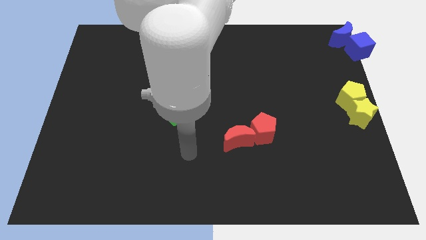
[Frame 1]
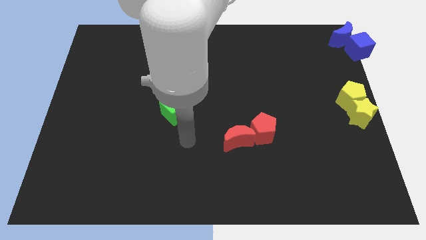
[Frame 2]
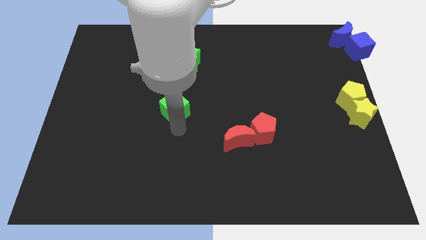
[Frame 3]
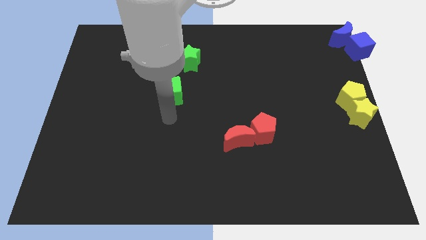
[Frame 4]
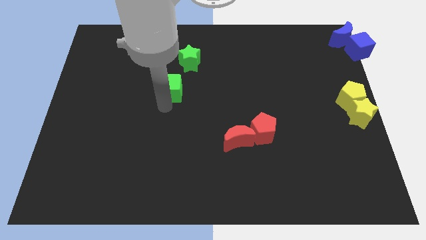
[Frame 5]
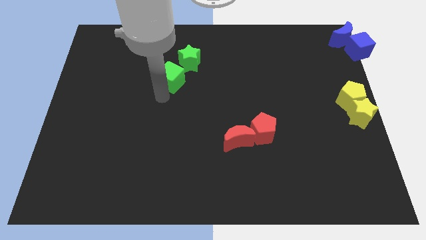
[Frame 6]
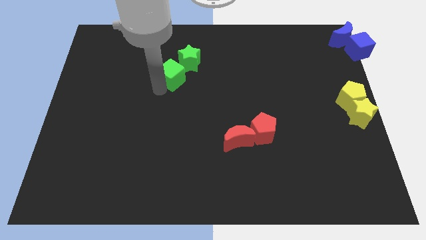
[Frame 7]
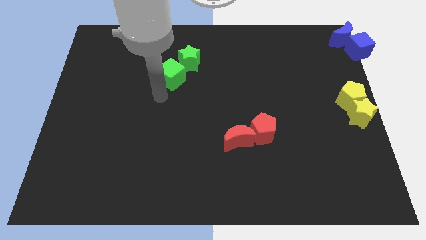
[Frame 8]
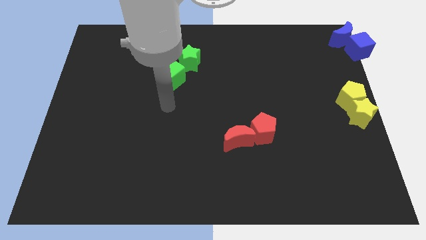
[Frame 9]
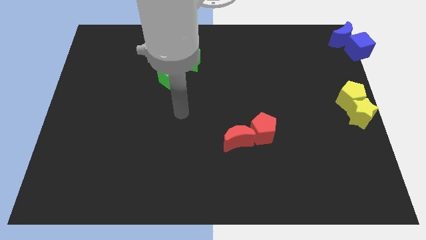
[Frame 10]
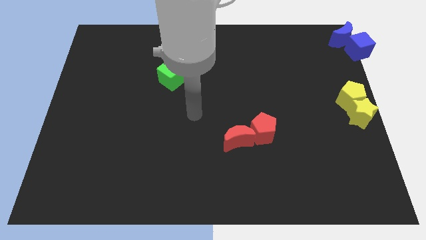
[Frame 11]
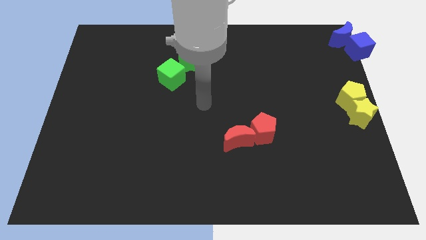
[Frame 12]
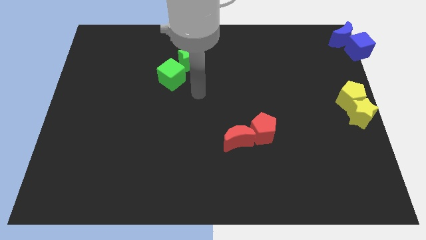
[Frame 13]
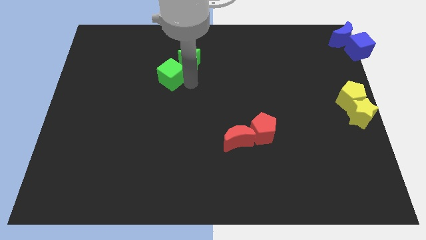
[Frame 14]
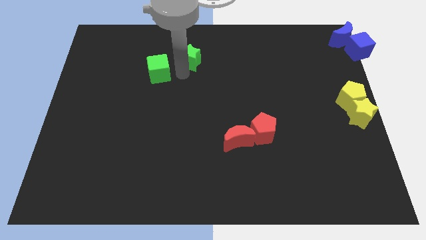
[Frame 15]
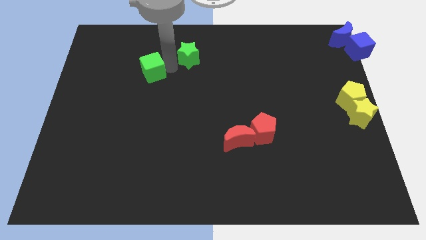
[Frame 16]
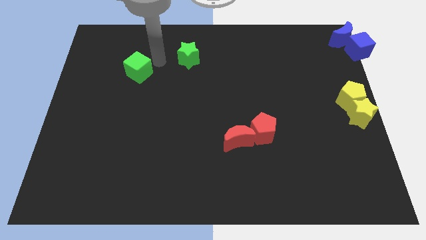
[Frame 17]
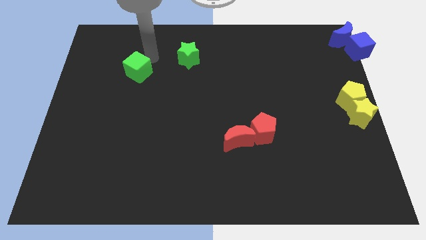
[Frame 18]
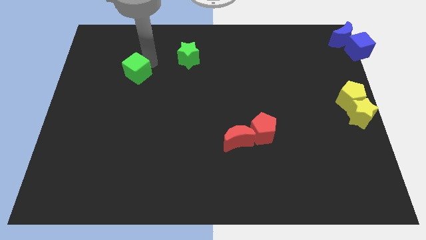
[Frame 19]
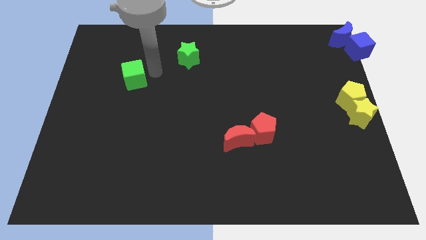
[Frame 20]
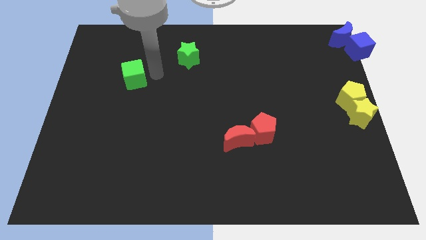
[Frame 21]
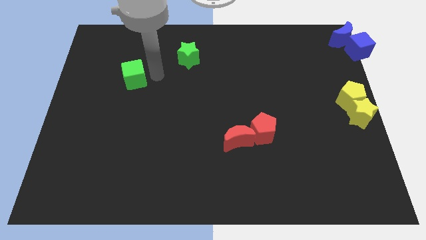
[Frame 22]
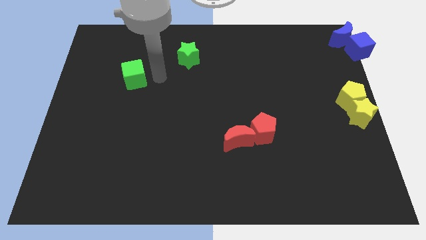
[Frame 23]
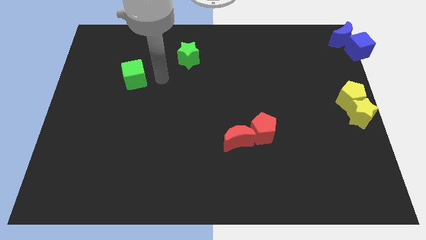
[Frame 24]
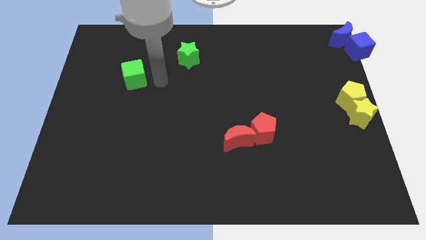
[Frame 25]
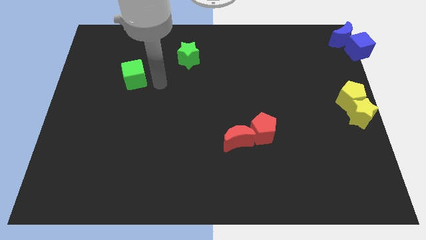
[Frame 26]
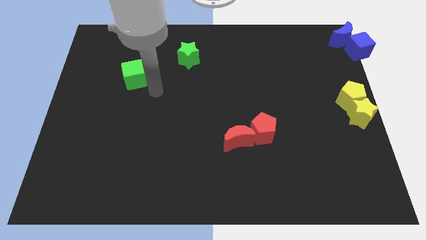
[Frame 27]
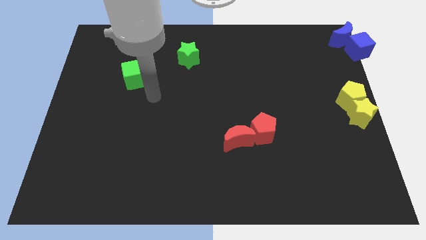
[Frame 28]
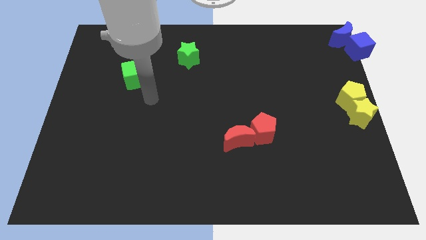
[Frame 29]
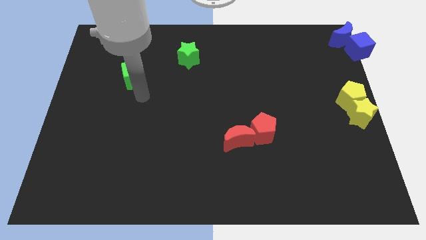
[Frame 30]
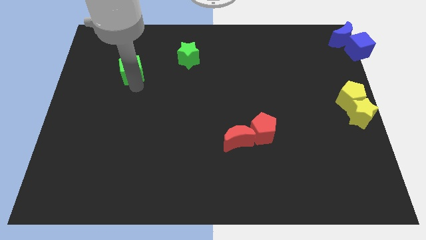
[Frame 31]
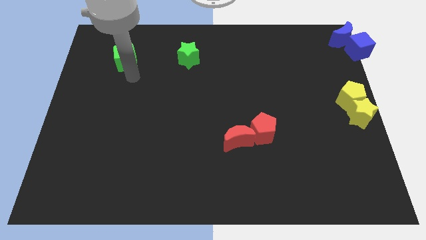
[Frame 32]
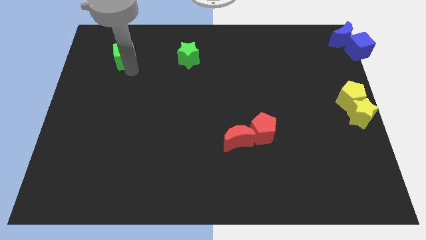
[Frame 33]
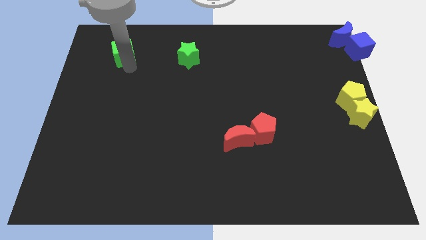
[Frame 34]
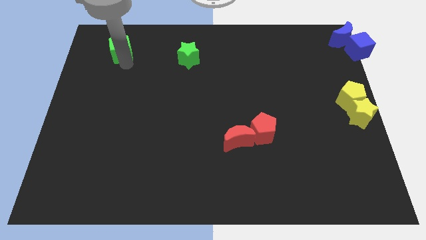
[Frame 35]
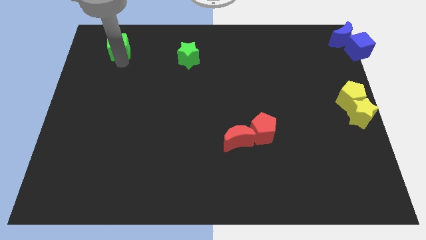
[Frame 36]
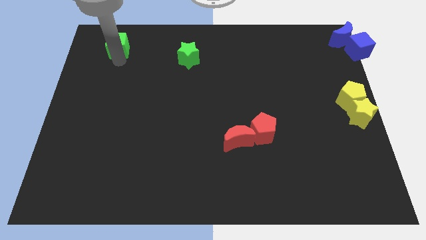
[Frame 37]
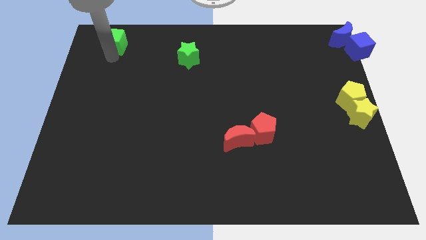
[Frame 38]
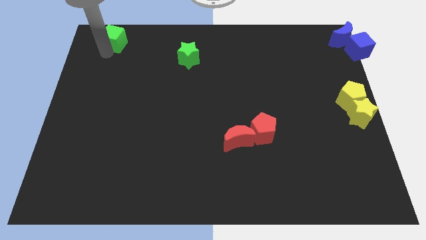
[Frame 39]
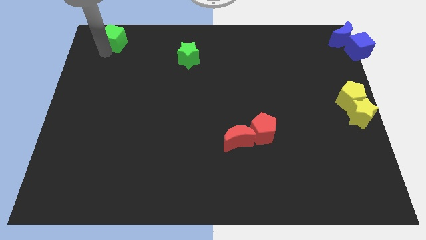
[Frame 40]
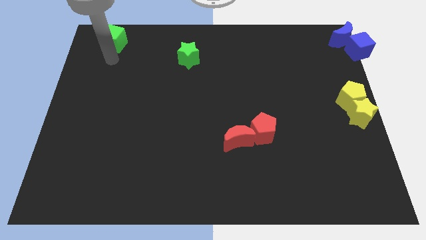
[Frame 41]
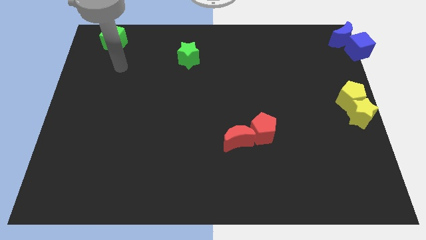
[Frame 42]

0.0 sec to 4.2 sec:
move the green cube to the top left corner of the board

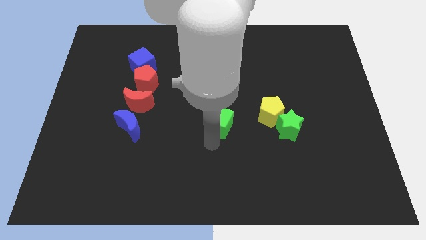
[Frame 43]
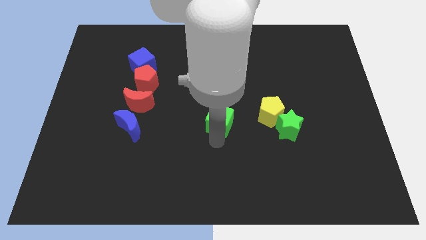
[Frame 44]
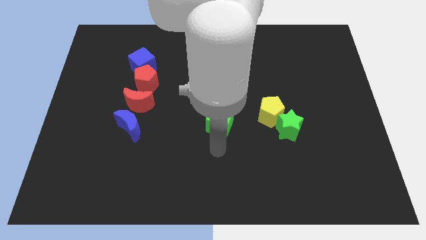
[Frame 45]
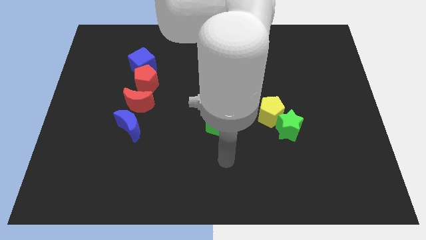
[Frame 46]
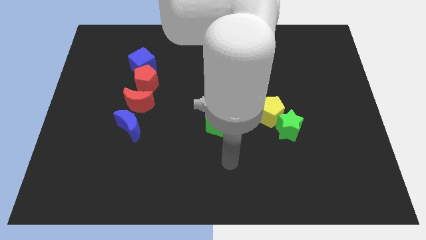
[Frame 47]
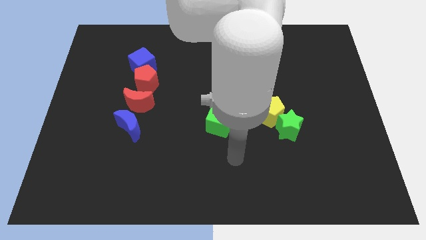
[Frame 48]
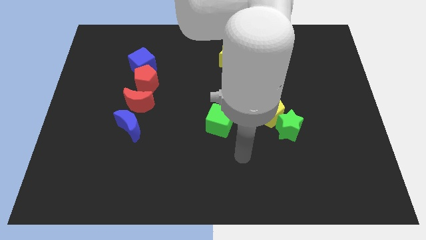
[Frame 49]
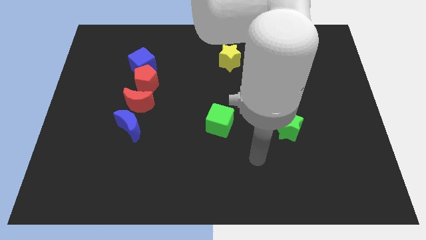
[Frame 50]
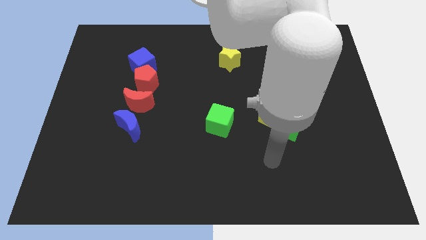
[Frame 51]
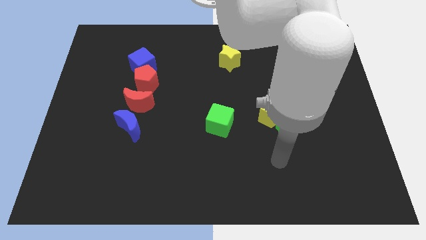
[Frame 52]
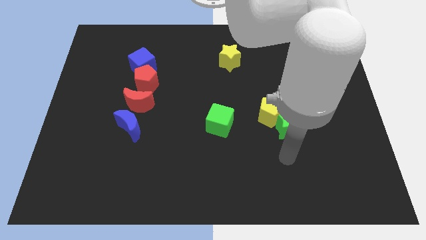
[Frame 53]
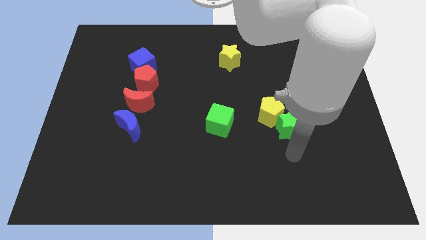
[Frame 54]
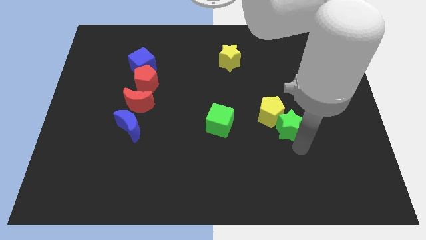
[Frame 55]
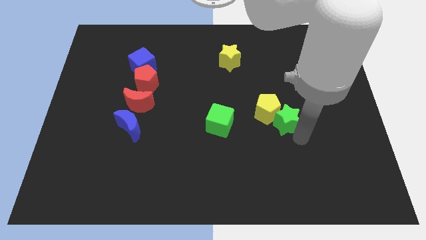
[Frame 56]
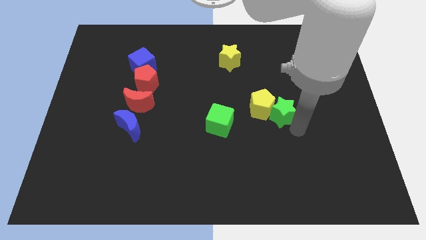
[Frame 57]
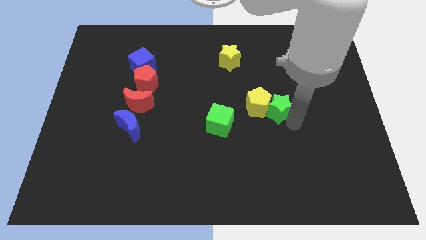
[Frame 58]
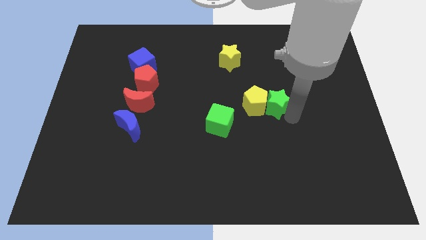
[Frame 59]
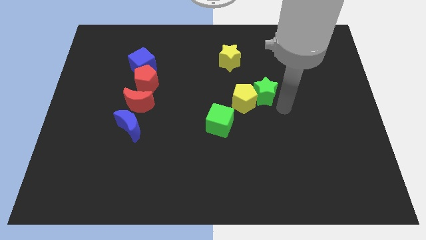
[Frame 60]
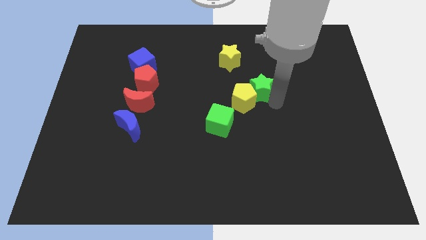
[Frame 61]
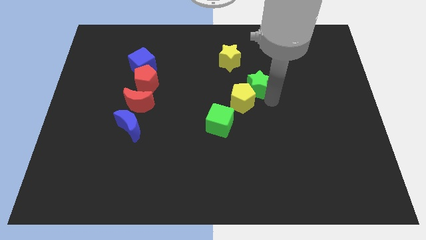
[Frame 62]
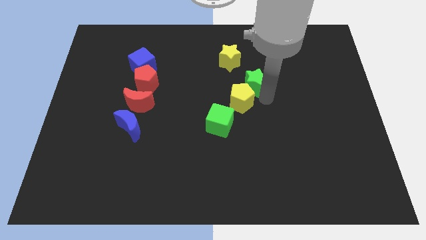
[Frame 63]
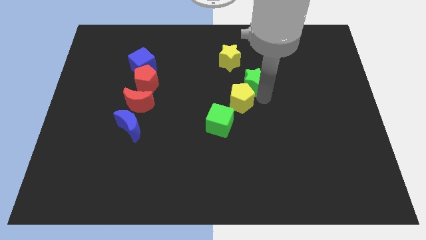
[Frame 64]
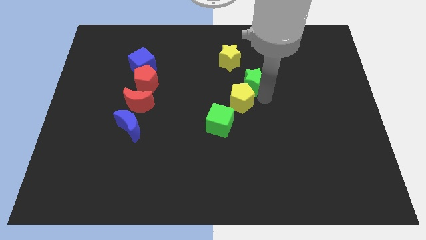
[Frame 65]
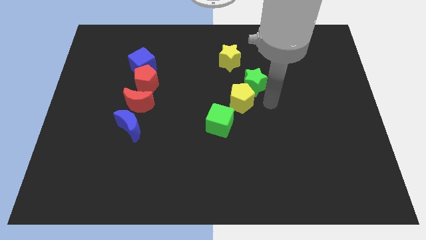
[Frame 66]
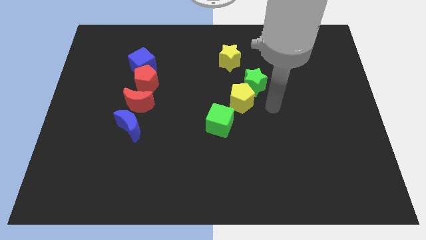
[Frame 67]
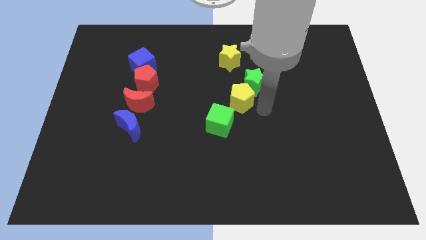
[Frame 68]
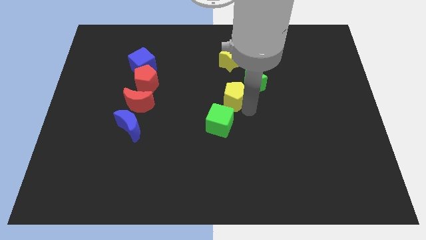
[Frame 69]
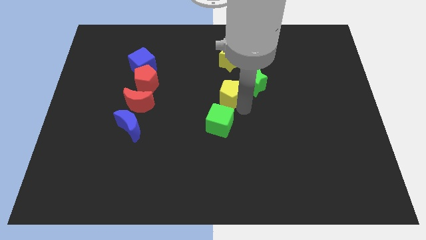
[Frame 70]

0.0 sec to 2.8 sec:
push green star into yellow pentagon

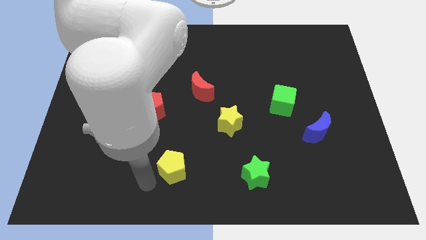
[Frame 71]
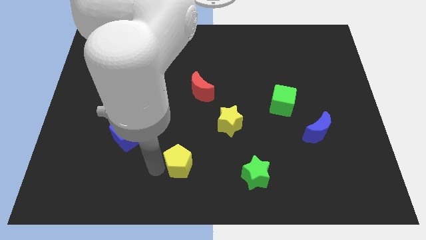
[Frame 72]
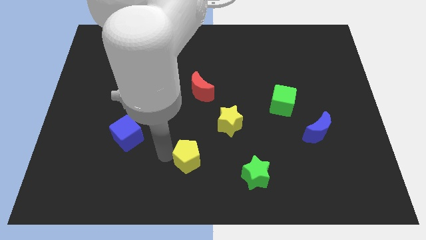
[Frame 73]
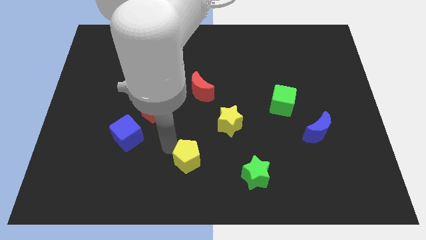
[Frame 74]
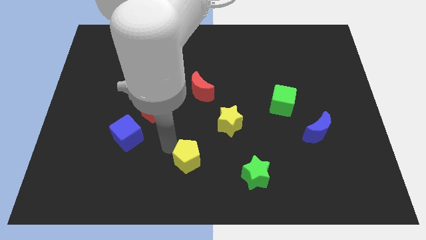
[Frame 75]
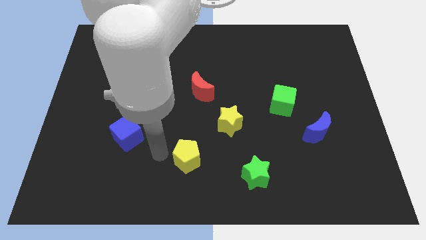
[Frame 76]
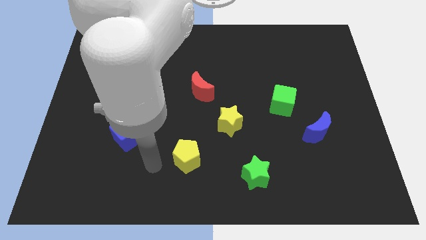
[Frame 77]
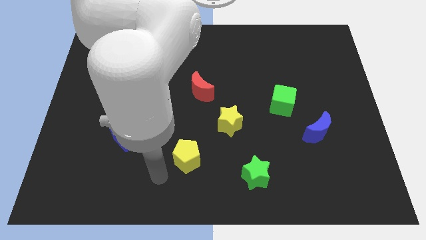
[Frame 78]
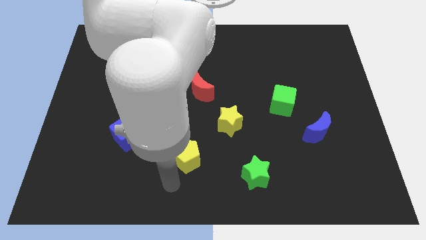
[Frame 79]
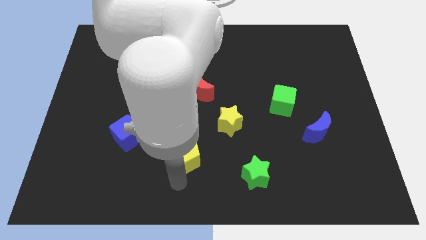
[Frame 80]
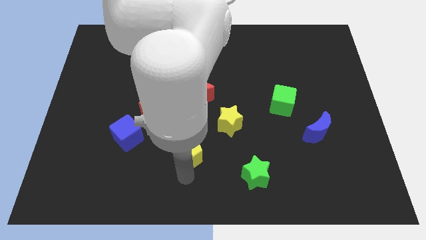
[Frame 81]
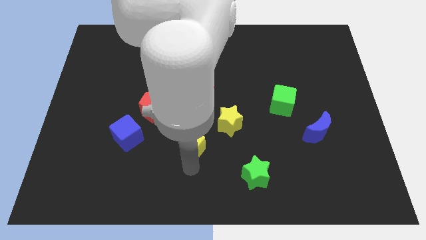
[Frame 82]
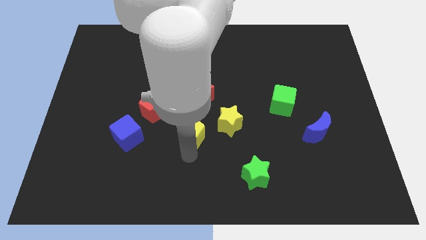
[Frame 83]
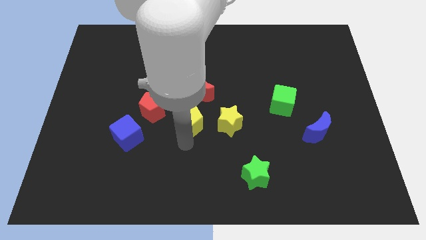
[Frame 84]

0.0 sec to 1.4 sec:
push yellow pentagon towards left to the yellow star

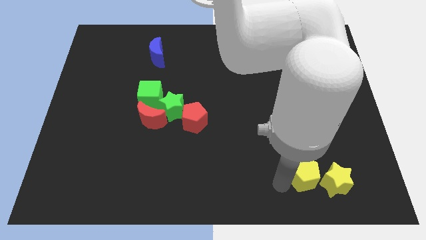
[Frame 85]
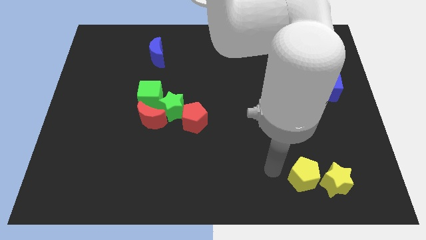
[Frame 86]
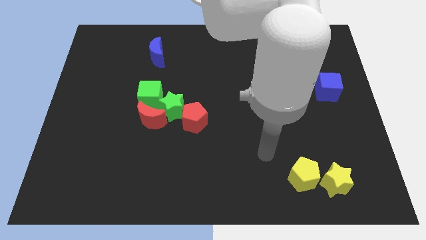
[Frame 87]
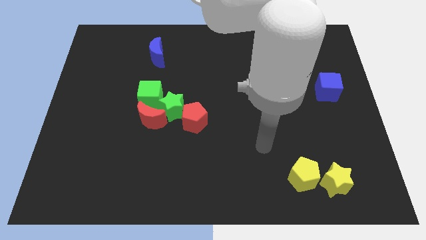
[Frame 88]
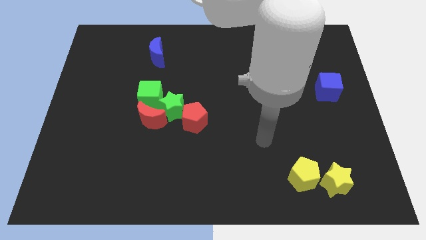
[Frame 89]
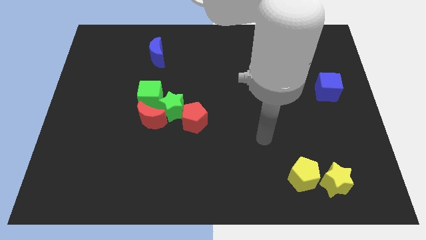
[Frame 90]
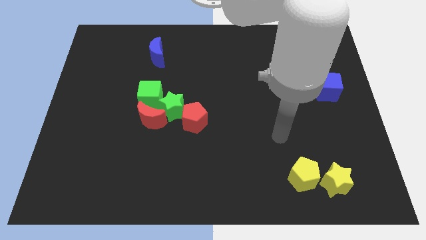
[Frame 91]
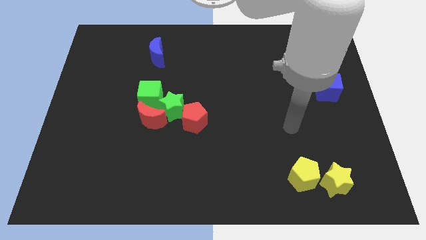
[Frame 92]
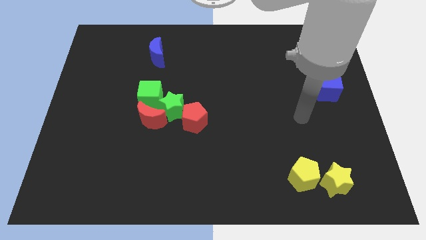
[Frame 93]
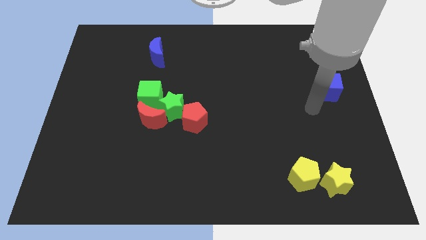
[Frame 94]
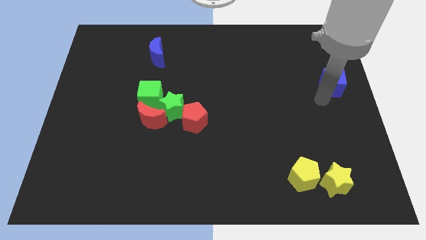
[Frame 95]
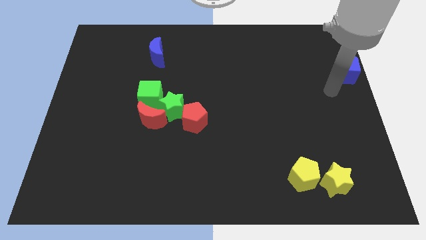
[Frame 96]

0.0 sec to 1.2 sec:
move your arm away from yellow pentagon
